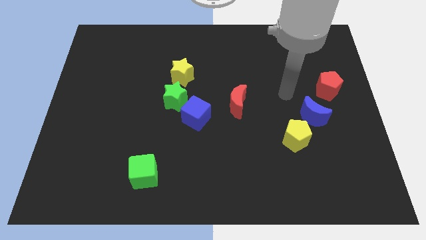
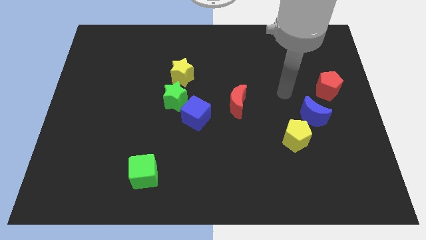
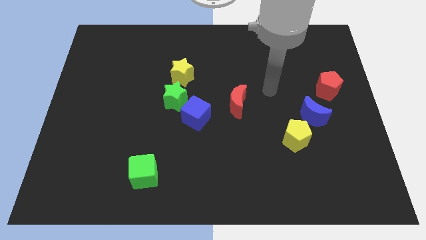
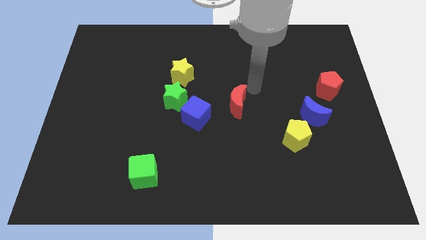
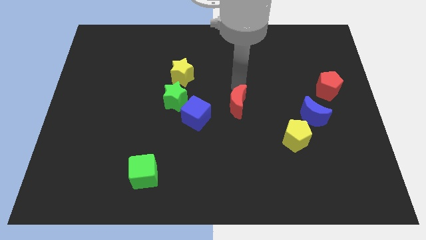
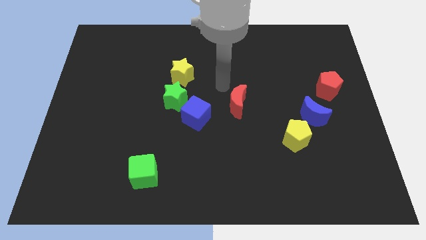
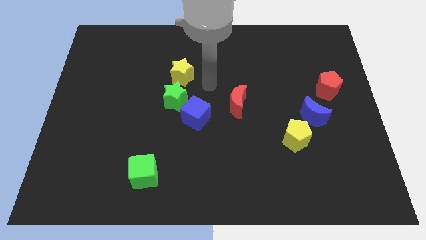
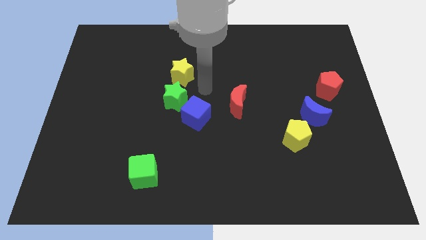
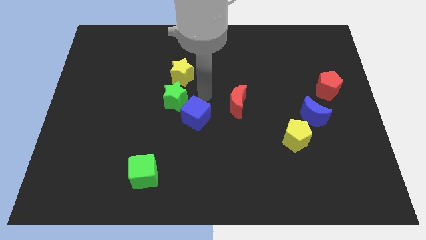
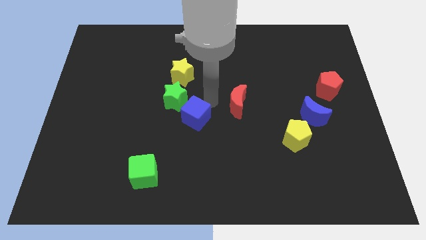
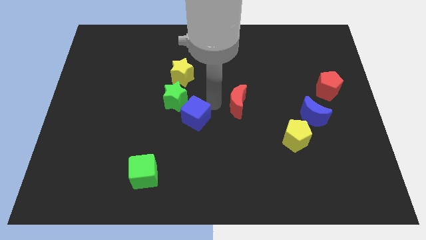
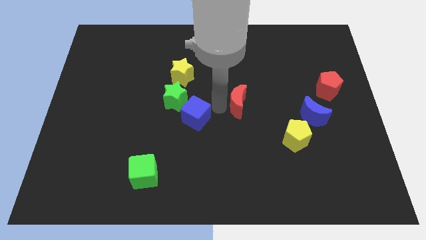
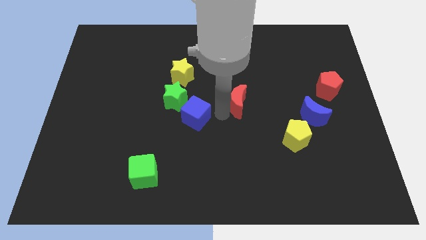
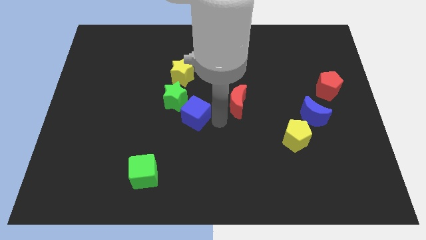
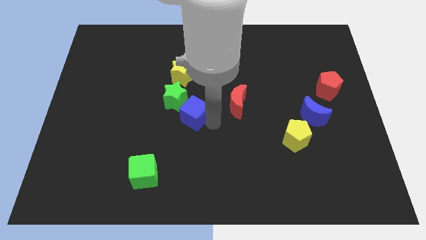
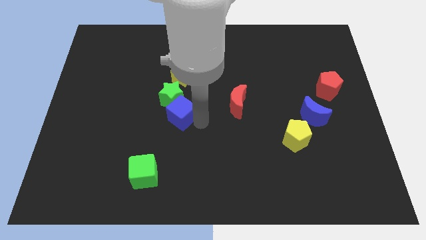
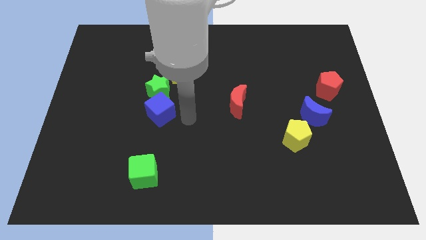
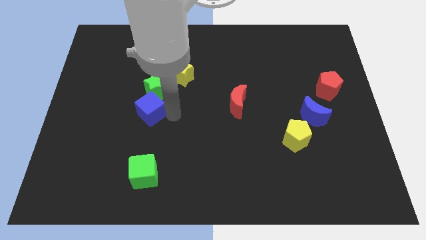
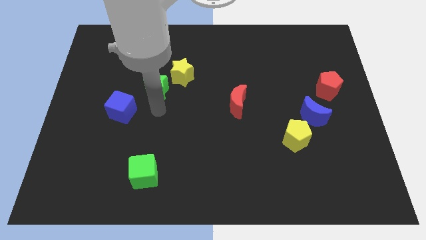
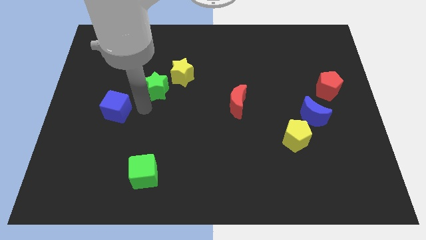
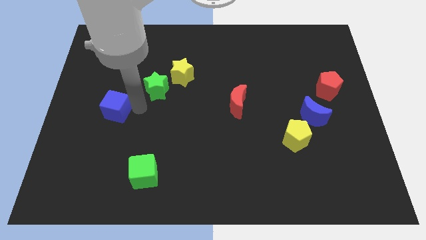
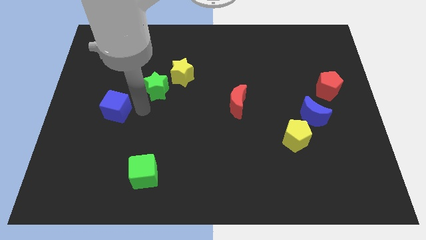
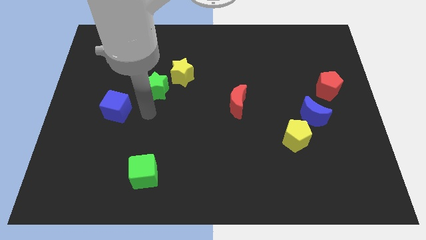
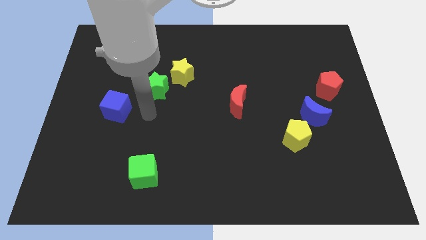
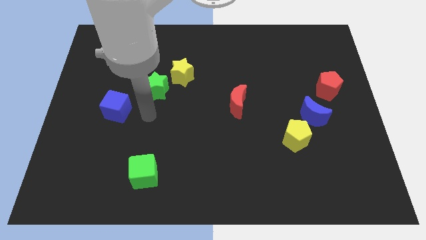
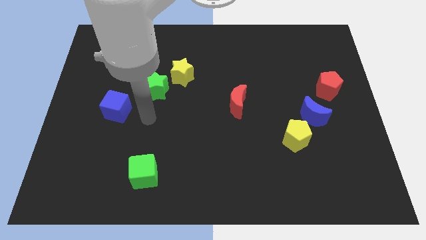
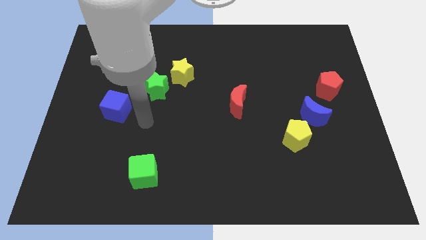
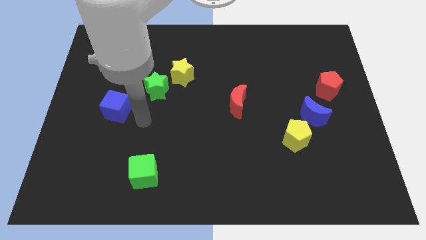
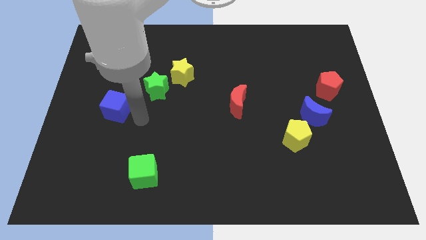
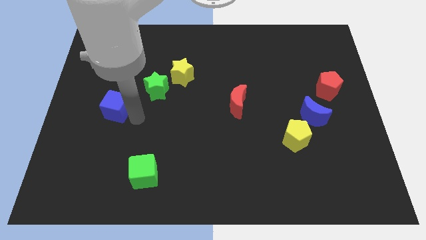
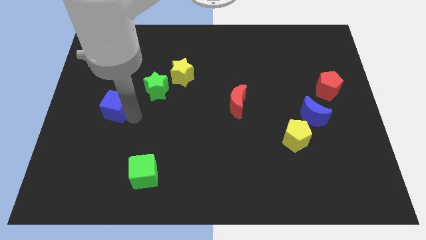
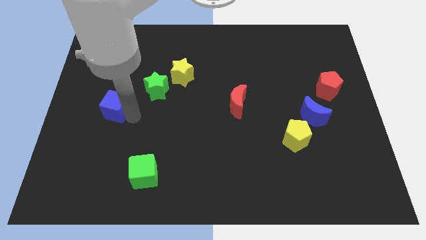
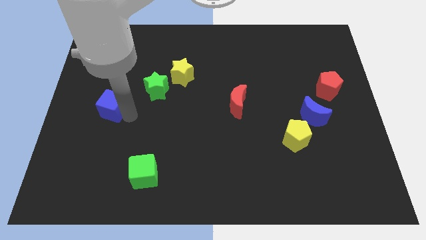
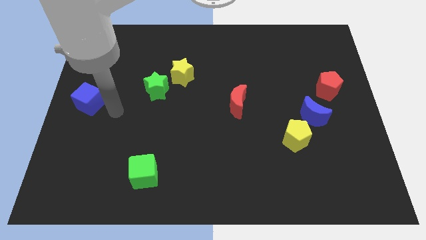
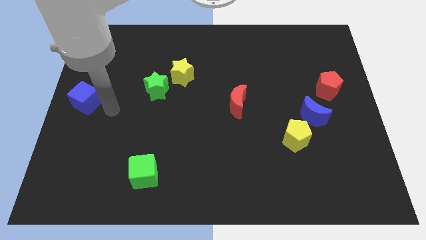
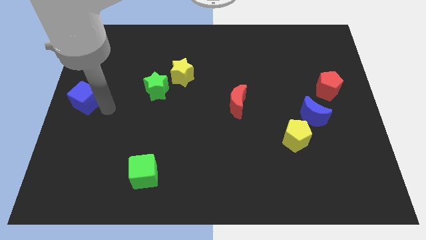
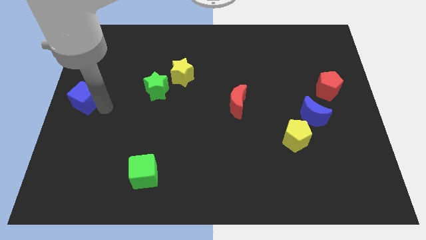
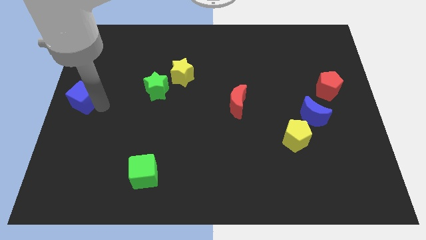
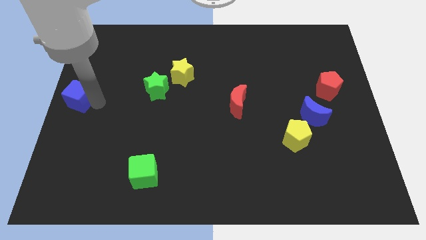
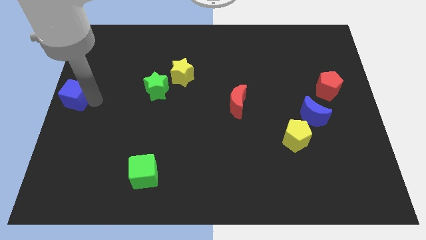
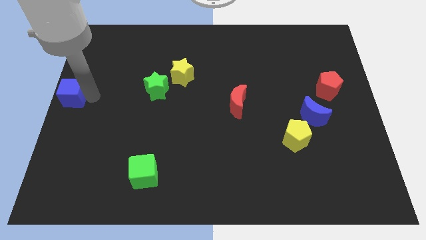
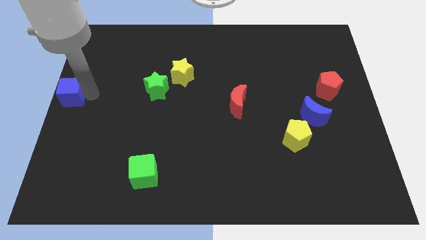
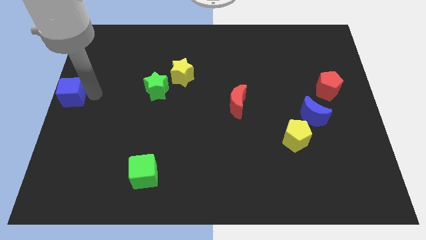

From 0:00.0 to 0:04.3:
move the blue cube to the center left

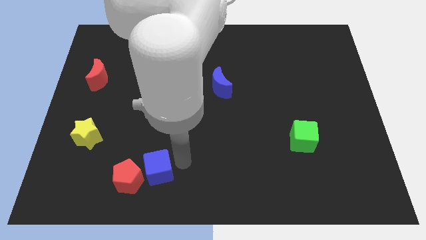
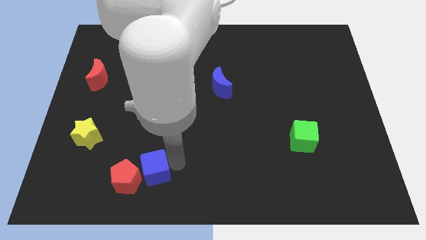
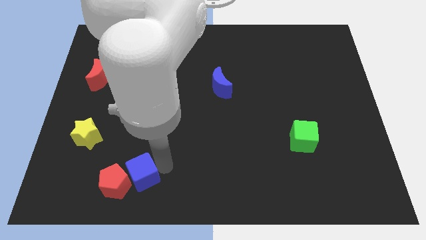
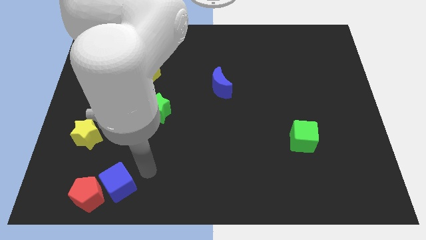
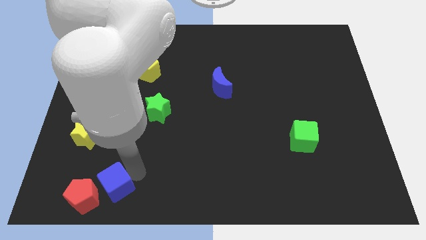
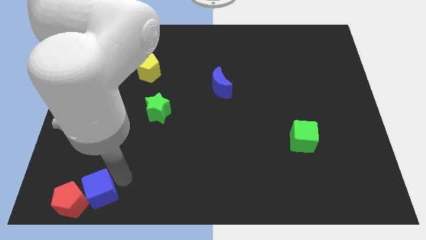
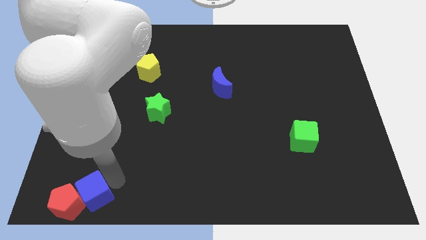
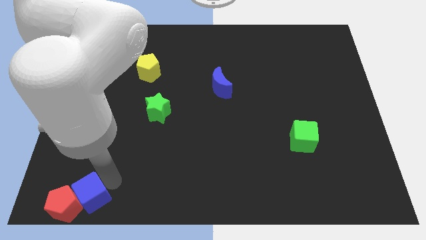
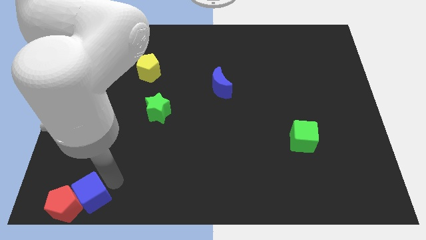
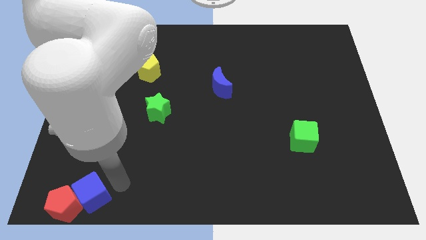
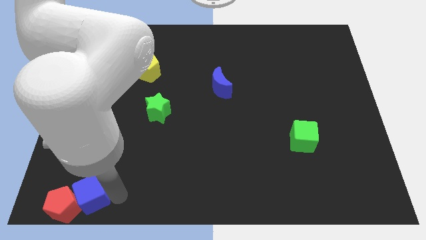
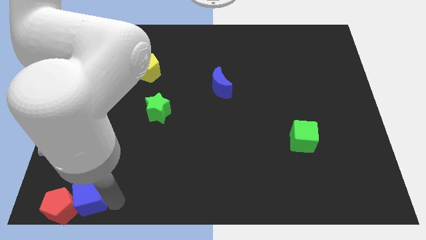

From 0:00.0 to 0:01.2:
push the blue cube and red pentagon to the bottom left side of the board

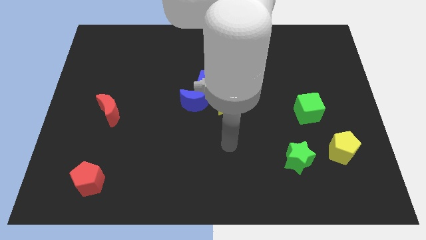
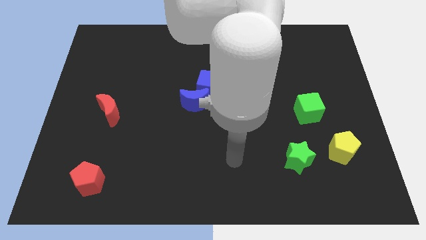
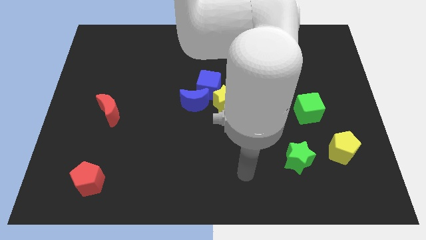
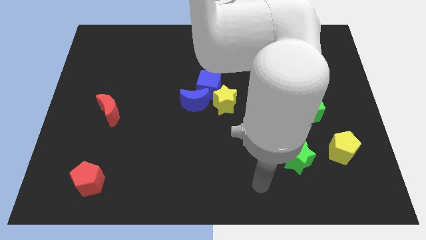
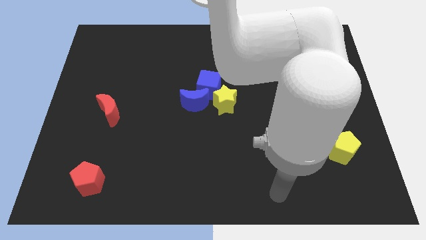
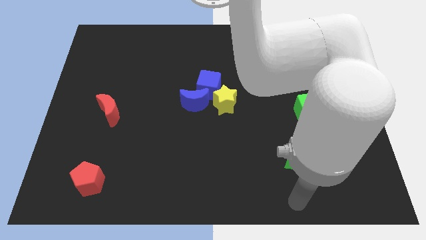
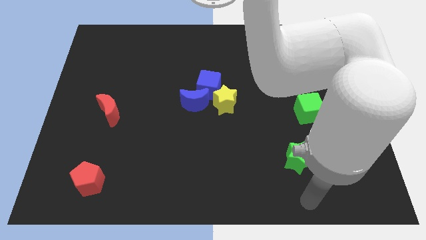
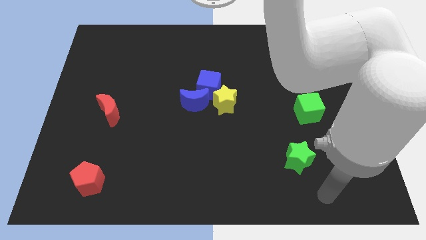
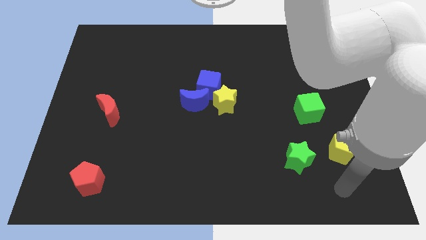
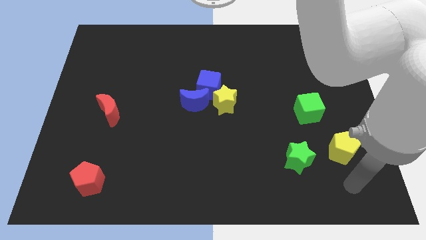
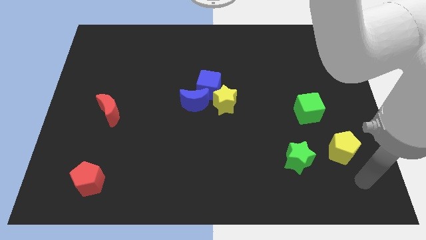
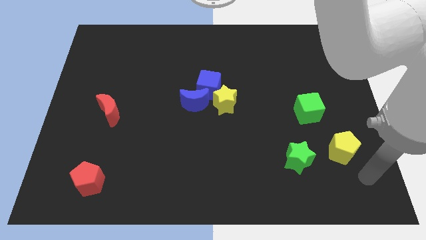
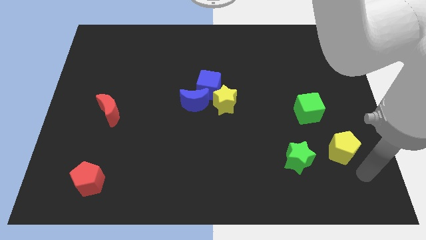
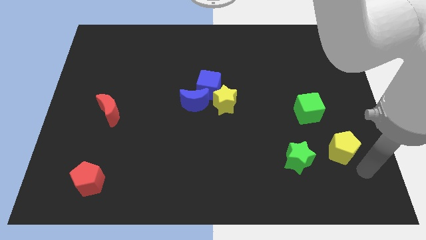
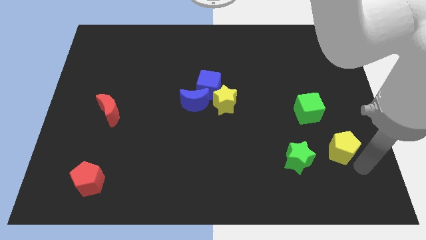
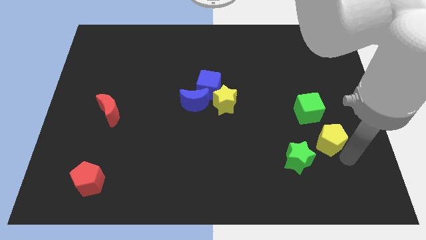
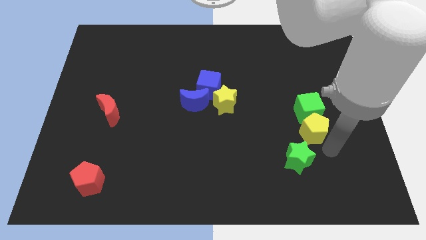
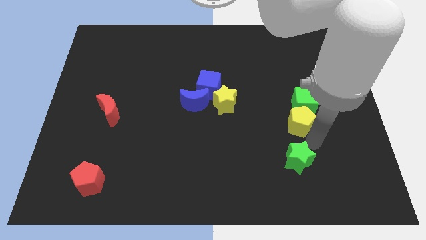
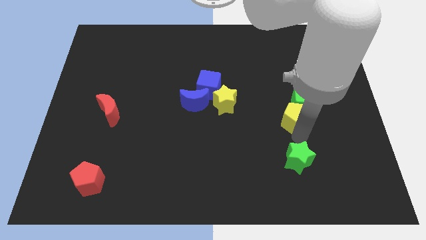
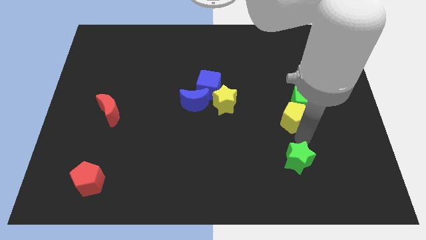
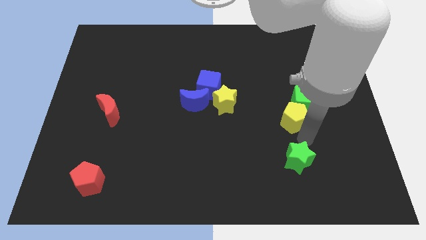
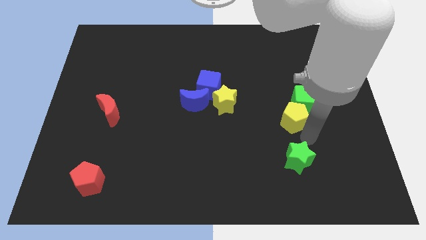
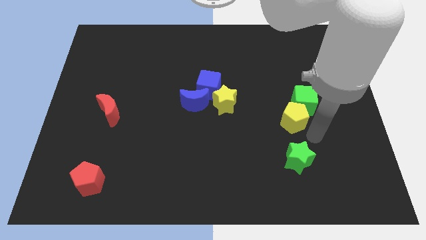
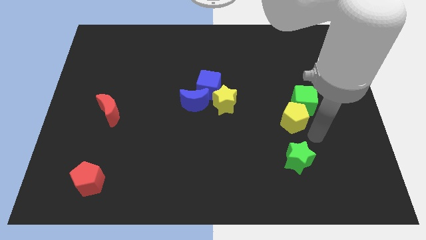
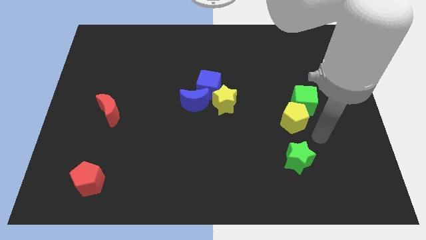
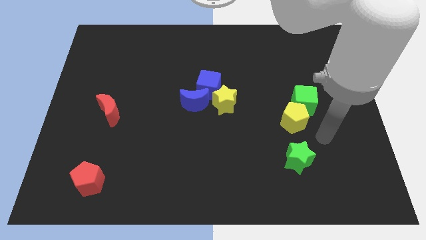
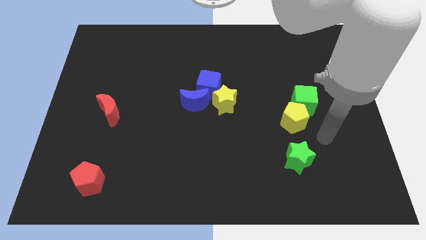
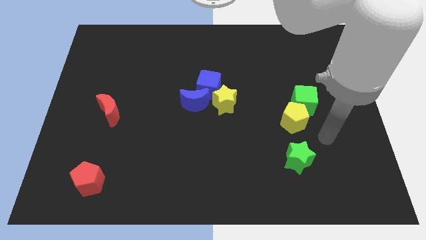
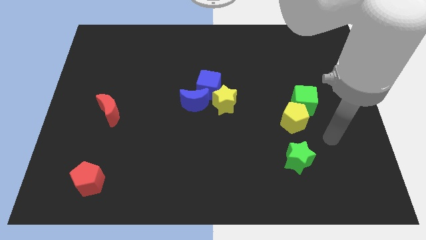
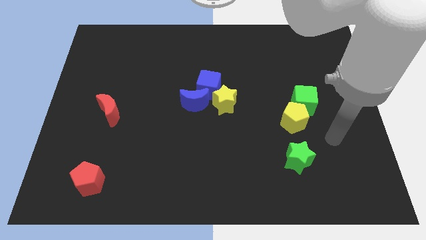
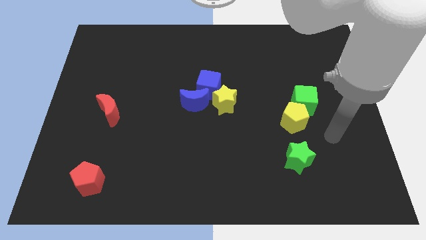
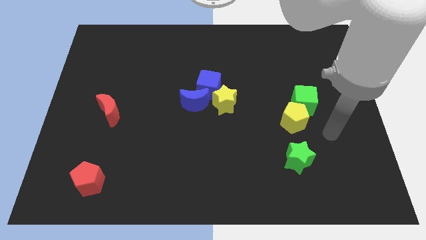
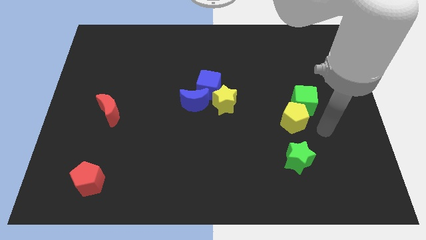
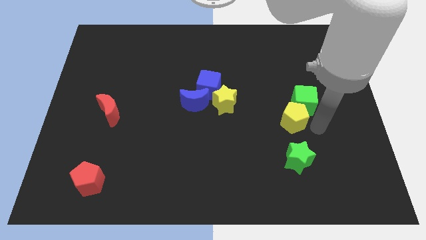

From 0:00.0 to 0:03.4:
place the yellow pentagon below the green cube
